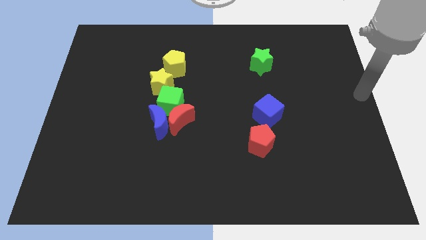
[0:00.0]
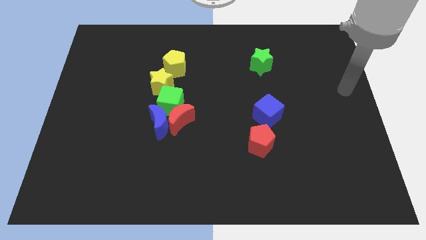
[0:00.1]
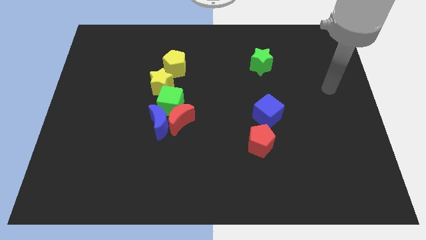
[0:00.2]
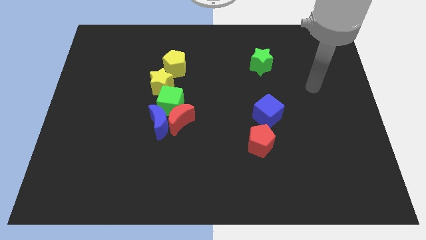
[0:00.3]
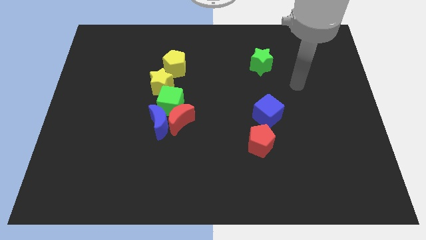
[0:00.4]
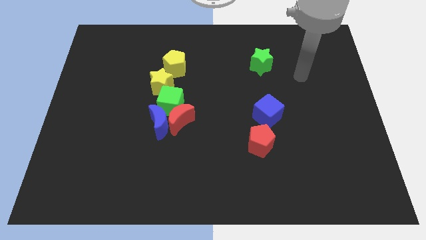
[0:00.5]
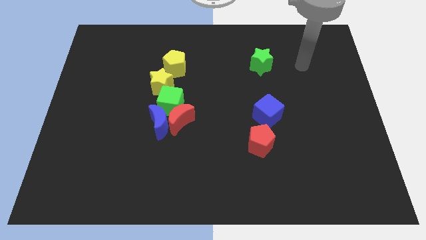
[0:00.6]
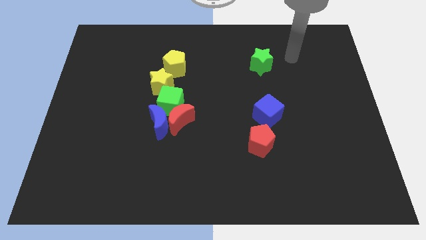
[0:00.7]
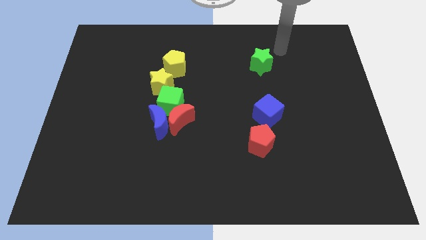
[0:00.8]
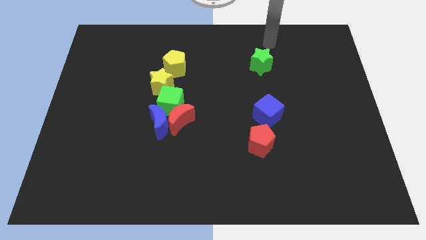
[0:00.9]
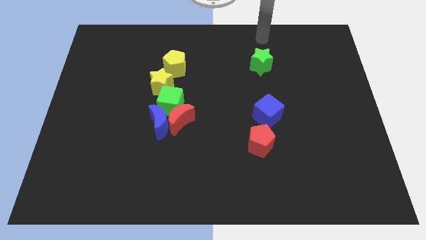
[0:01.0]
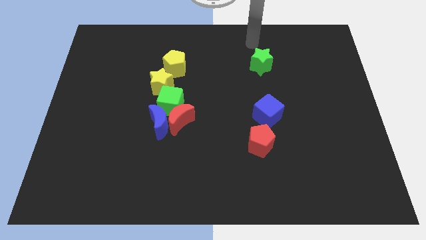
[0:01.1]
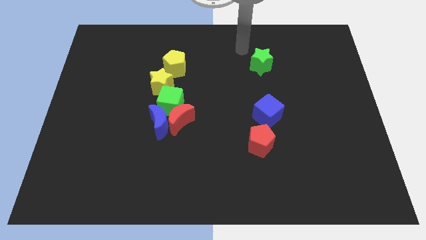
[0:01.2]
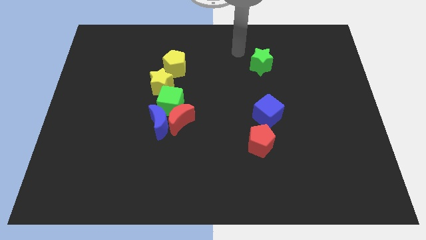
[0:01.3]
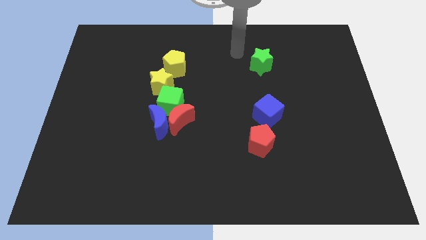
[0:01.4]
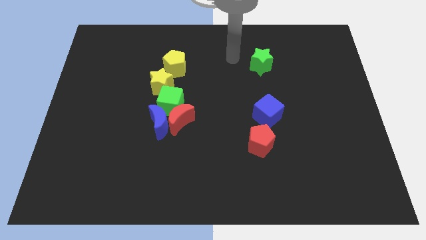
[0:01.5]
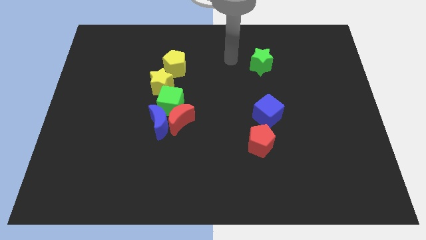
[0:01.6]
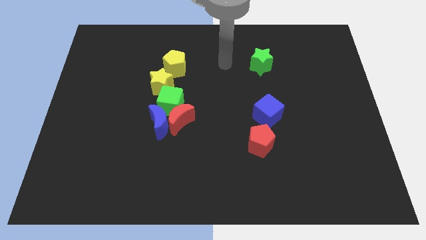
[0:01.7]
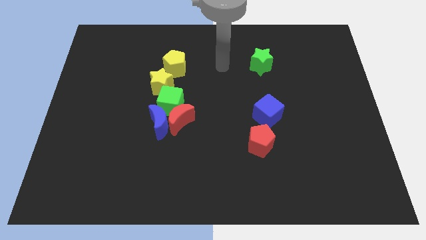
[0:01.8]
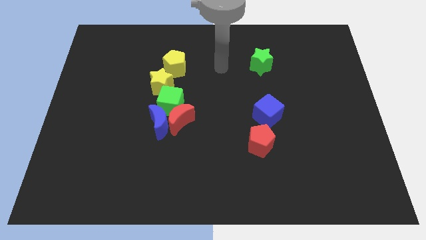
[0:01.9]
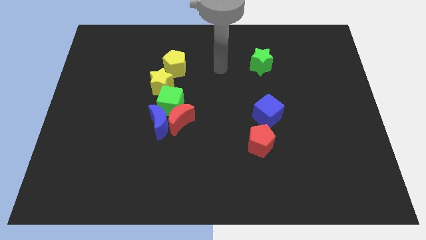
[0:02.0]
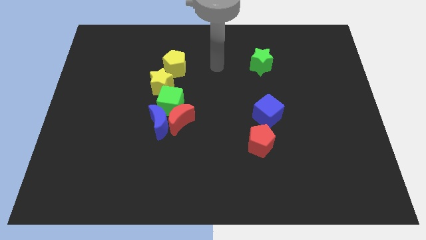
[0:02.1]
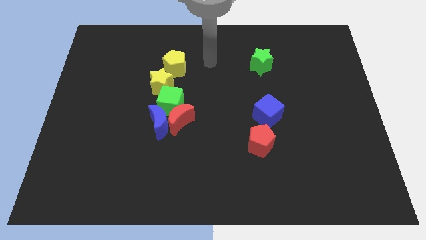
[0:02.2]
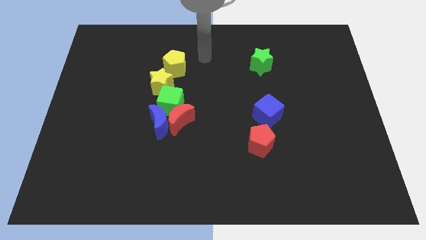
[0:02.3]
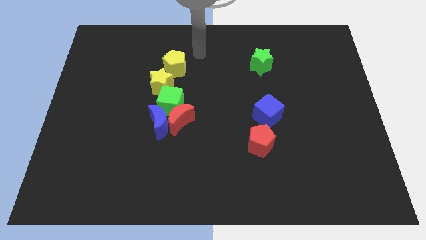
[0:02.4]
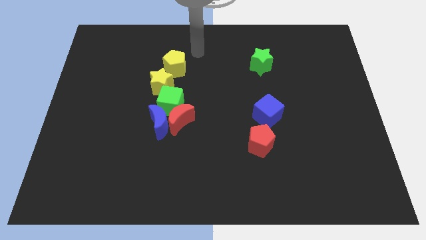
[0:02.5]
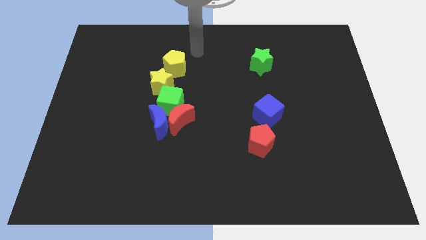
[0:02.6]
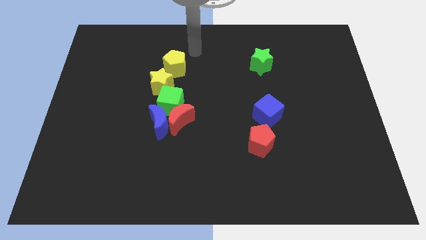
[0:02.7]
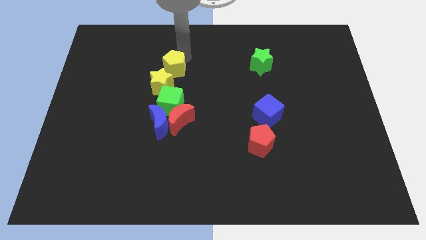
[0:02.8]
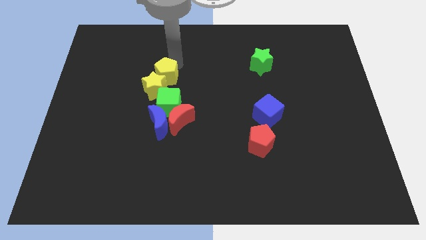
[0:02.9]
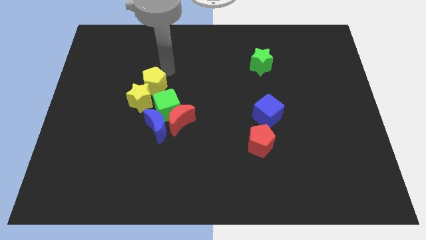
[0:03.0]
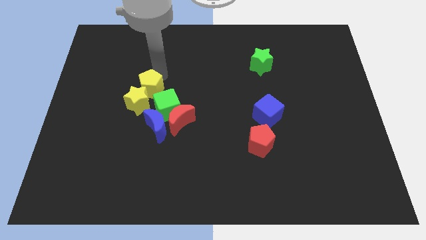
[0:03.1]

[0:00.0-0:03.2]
move the yellow blocks to the left of green cube

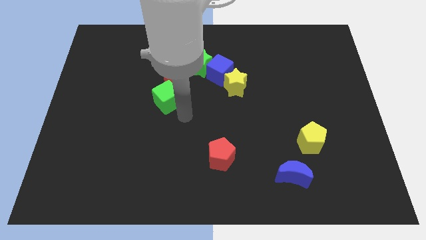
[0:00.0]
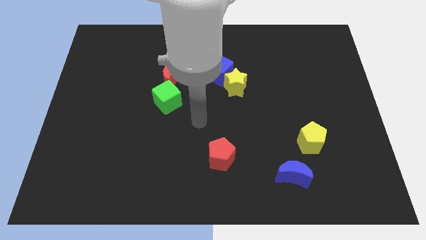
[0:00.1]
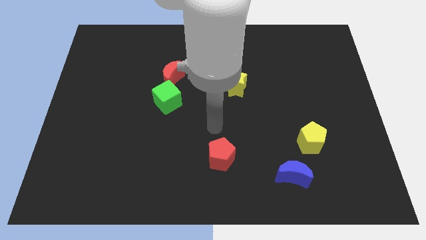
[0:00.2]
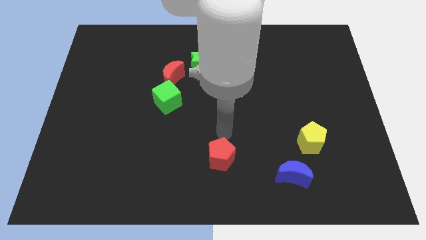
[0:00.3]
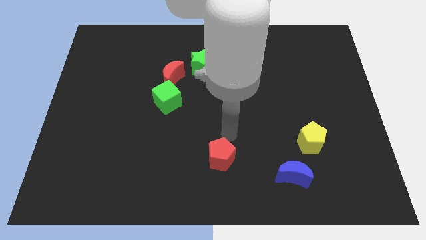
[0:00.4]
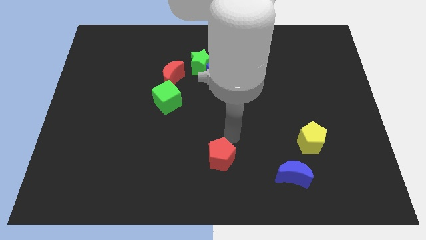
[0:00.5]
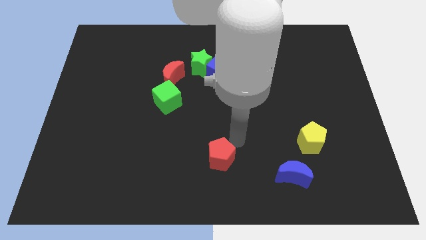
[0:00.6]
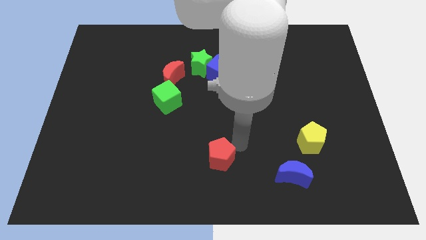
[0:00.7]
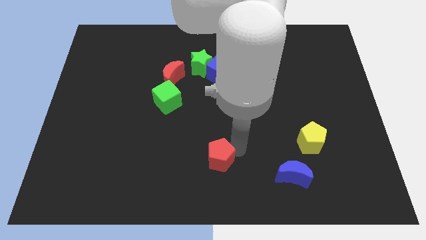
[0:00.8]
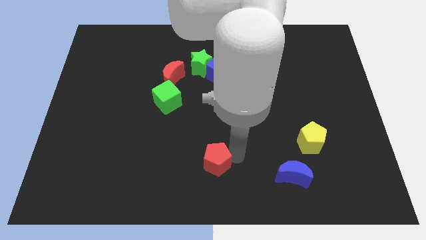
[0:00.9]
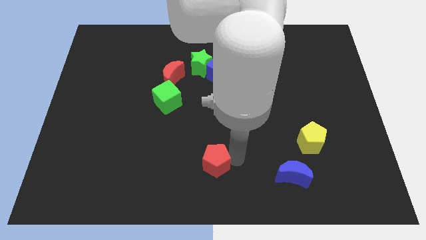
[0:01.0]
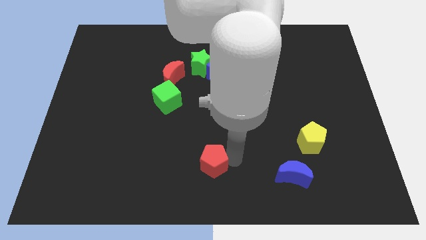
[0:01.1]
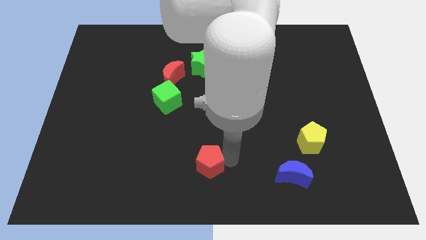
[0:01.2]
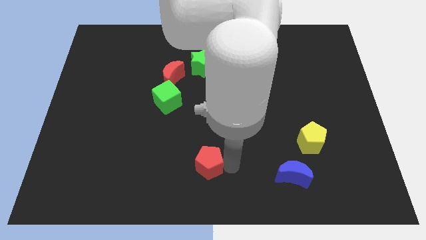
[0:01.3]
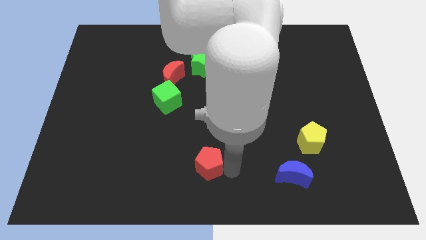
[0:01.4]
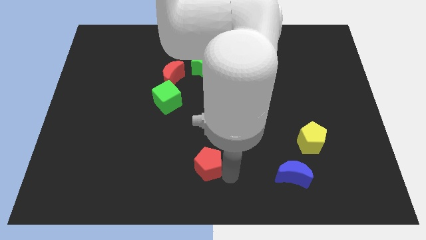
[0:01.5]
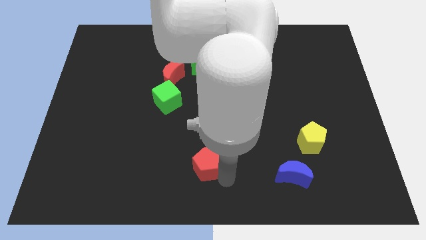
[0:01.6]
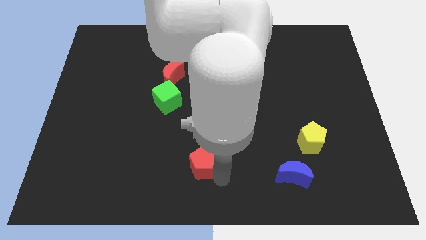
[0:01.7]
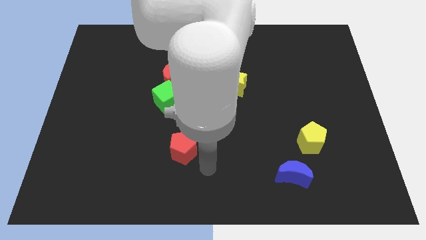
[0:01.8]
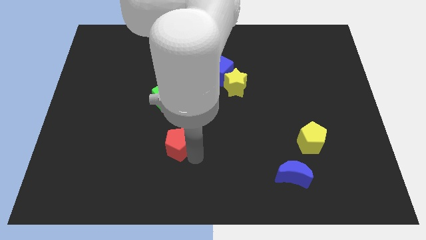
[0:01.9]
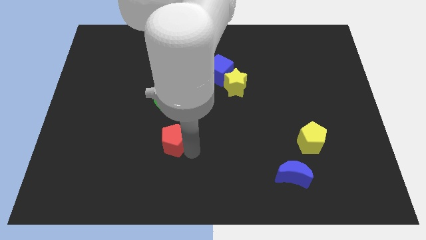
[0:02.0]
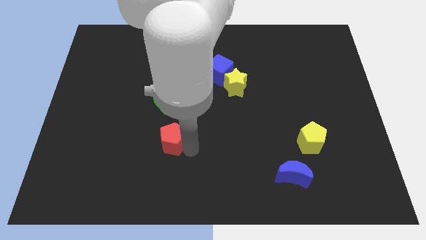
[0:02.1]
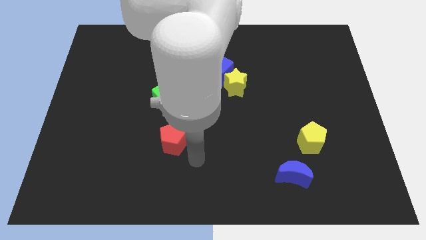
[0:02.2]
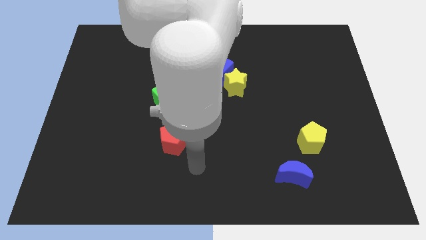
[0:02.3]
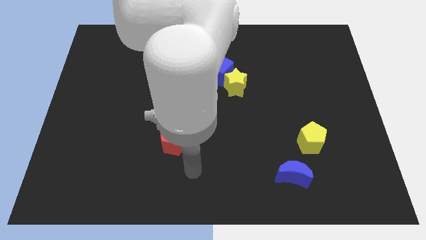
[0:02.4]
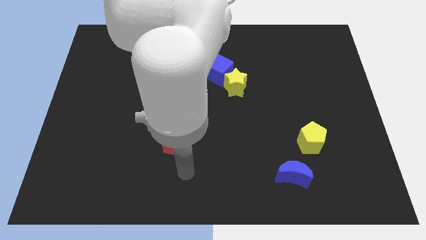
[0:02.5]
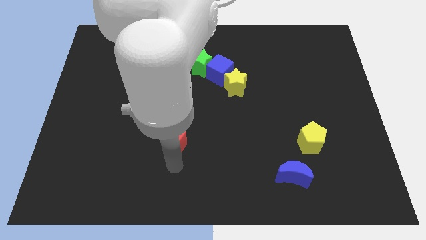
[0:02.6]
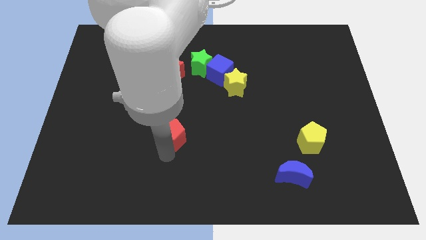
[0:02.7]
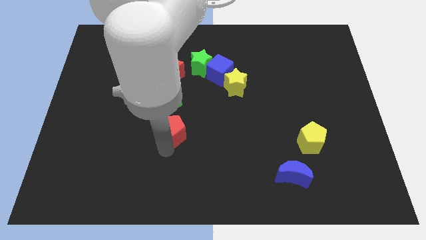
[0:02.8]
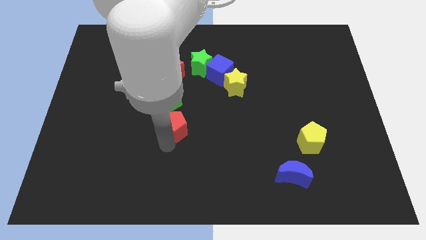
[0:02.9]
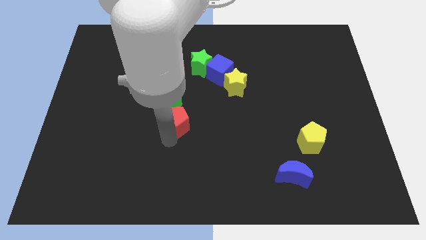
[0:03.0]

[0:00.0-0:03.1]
push the red pentagon to the bottom of the green cube

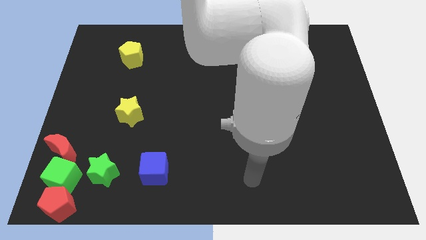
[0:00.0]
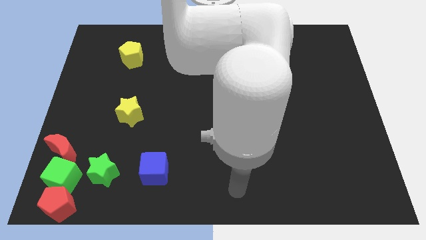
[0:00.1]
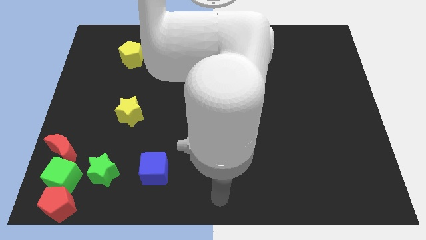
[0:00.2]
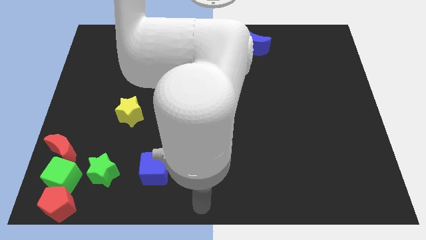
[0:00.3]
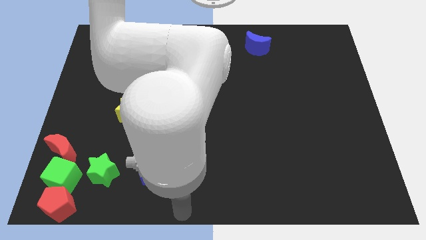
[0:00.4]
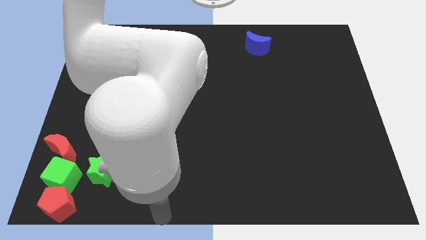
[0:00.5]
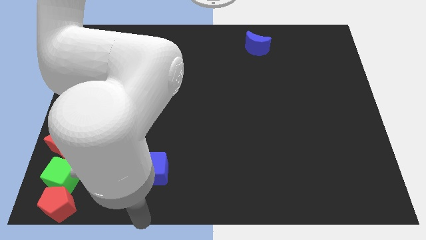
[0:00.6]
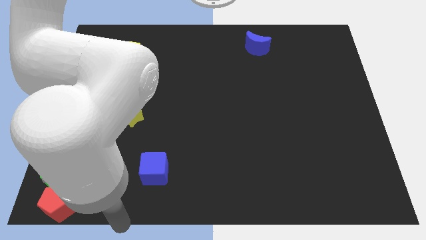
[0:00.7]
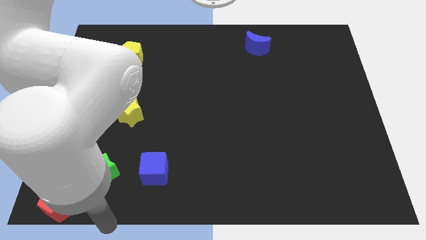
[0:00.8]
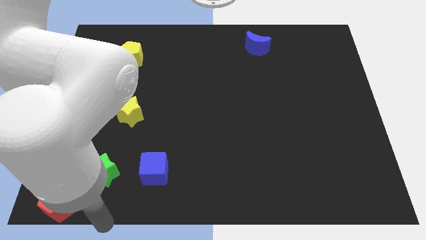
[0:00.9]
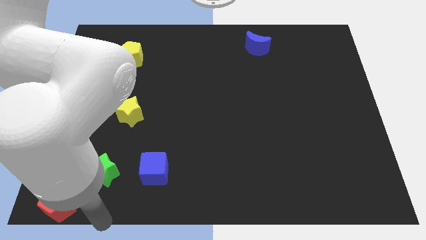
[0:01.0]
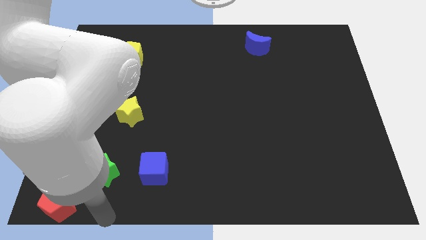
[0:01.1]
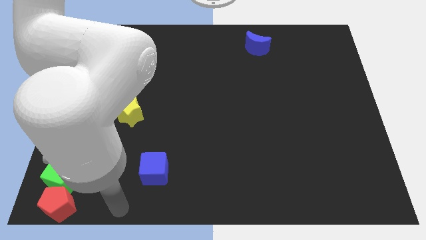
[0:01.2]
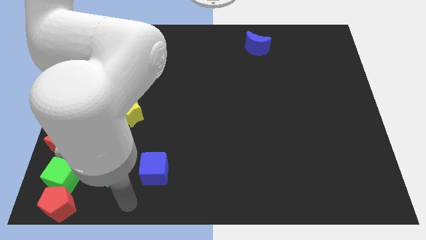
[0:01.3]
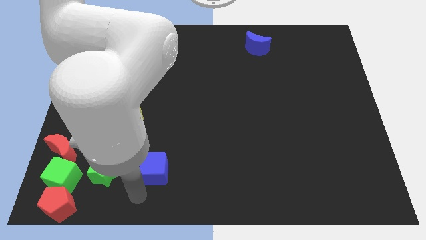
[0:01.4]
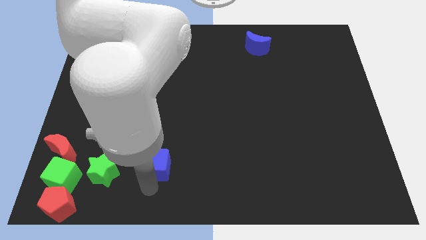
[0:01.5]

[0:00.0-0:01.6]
place your arm down to the blue cube

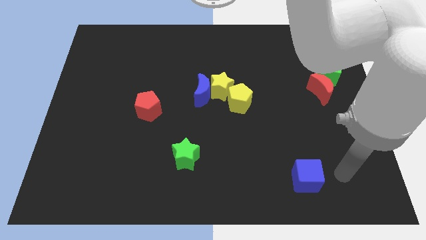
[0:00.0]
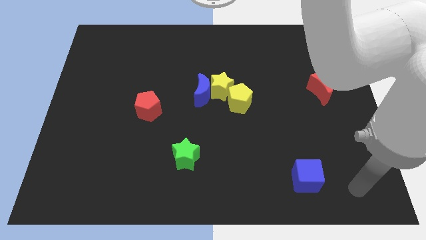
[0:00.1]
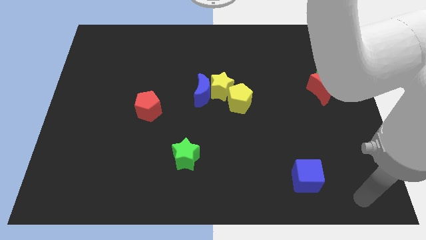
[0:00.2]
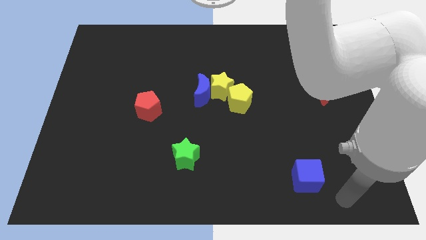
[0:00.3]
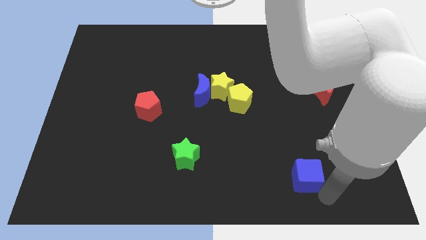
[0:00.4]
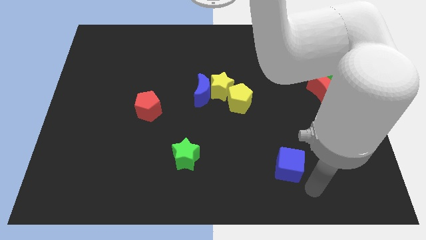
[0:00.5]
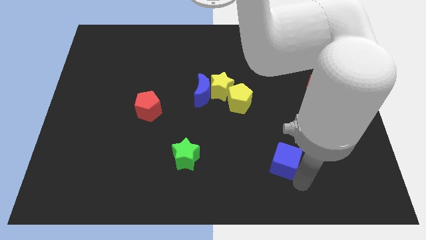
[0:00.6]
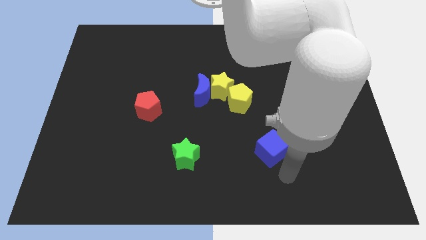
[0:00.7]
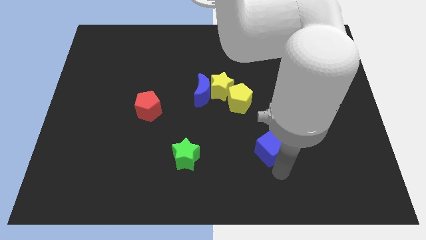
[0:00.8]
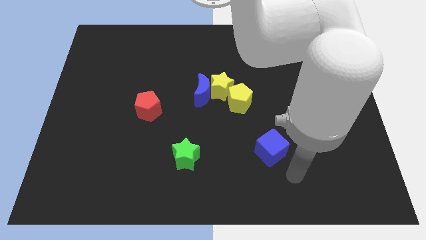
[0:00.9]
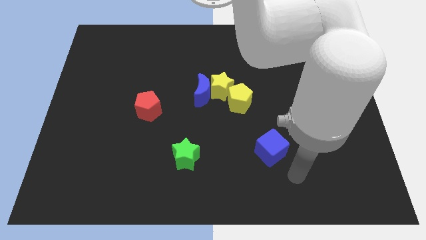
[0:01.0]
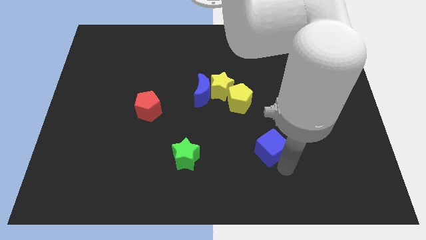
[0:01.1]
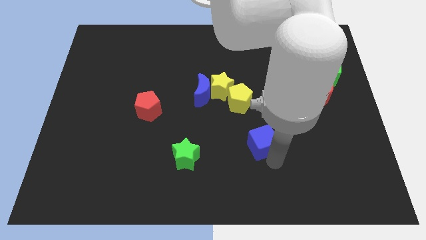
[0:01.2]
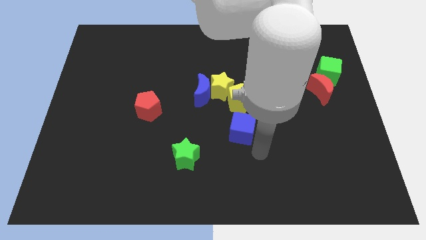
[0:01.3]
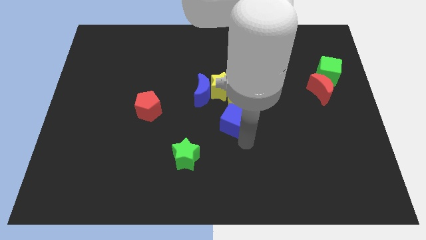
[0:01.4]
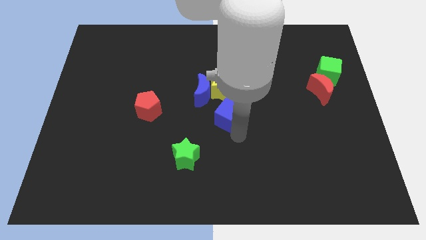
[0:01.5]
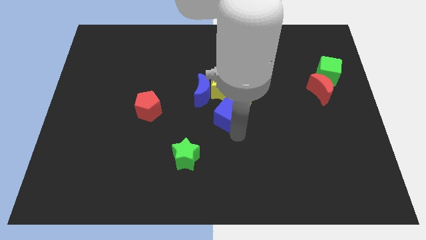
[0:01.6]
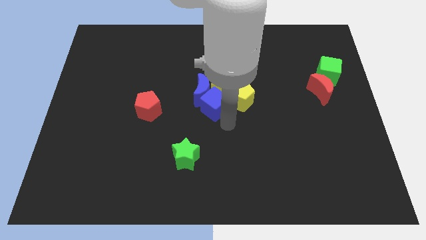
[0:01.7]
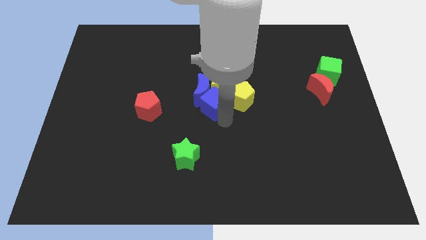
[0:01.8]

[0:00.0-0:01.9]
push the blue cube to the bottom side of the yellow star
